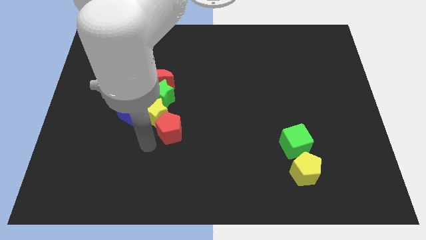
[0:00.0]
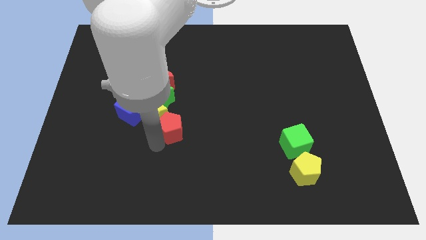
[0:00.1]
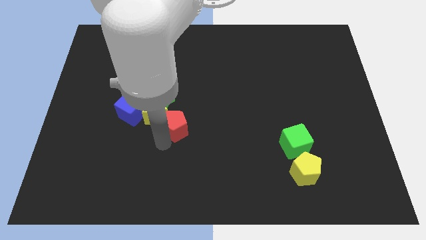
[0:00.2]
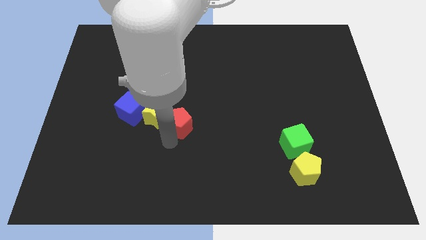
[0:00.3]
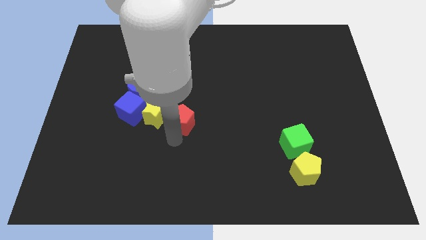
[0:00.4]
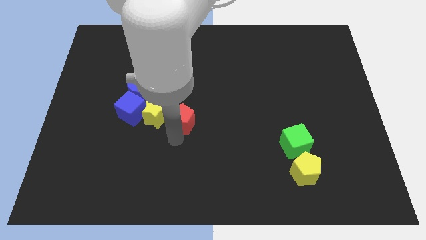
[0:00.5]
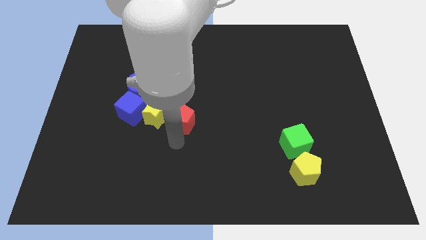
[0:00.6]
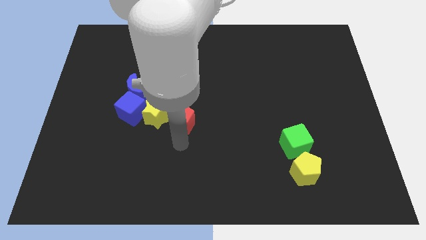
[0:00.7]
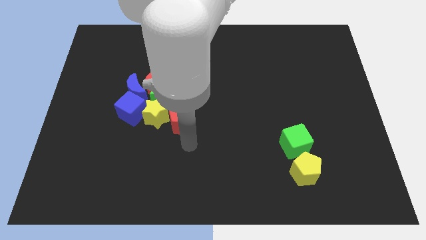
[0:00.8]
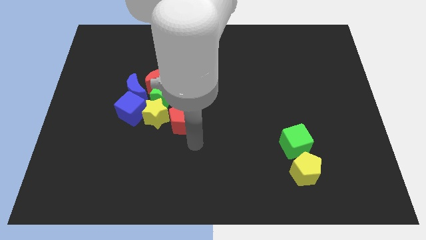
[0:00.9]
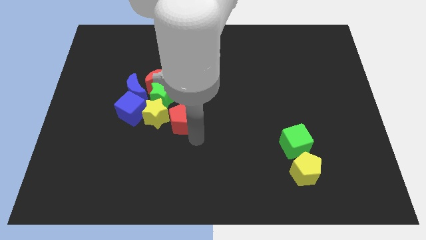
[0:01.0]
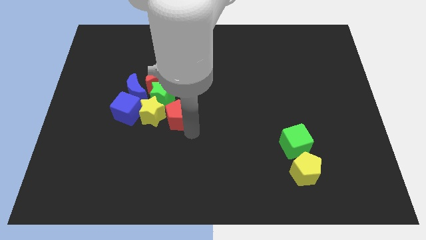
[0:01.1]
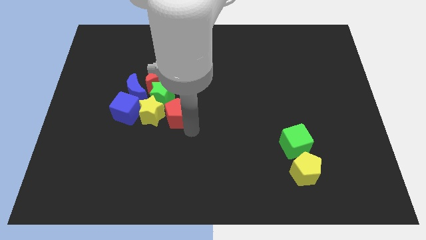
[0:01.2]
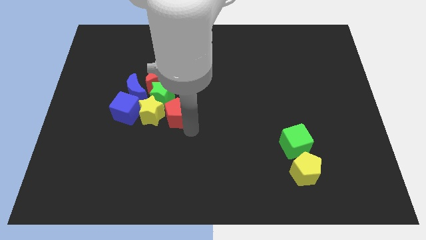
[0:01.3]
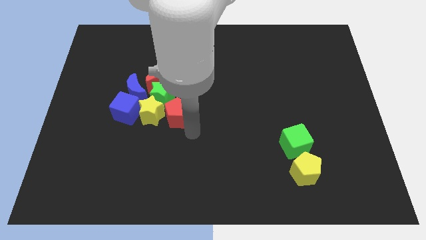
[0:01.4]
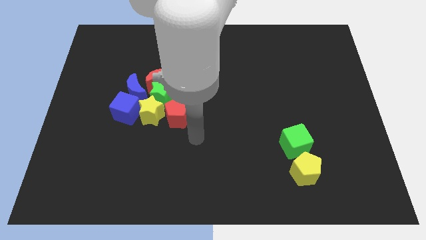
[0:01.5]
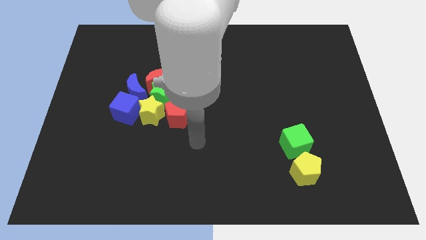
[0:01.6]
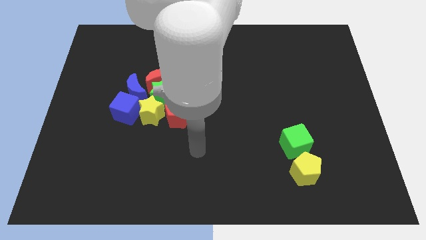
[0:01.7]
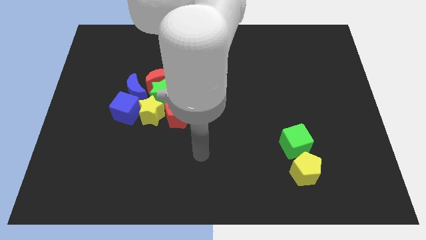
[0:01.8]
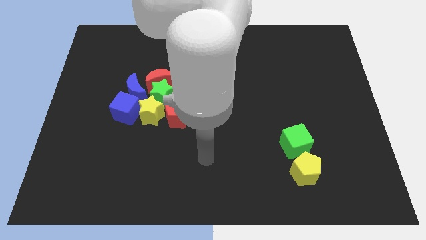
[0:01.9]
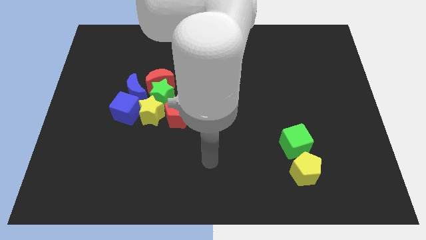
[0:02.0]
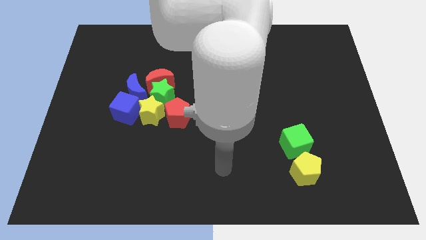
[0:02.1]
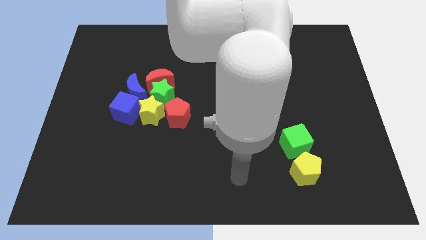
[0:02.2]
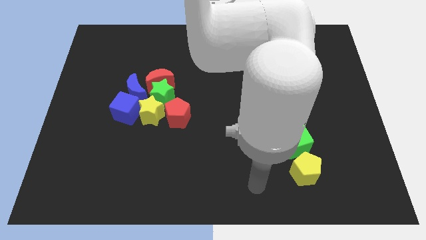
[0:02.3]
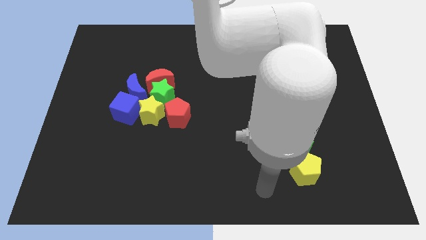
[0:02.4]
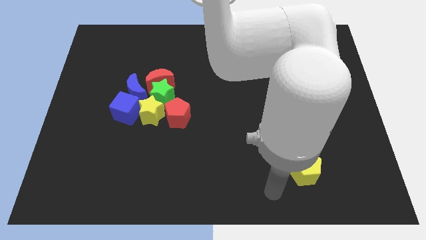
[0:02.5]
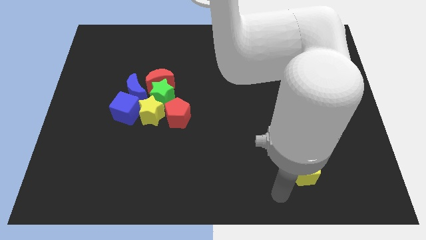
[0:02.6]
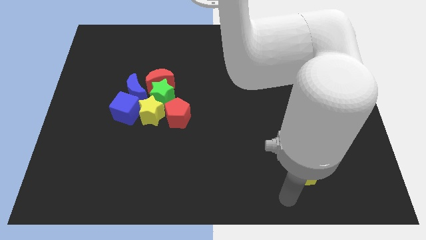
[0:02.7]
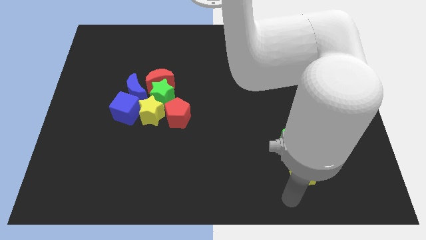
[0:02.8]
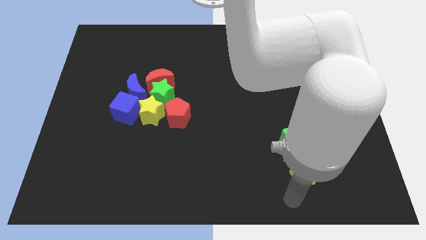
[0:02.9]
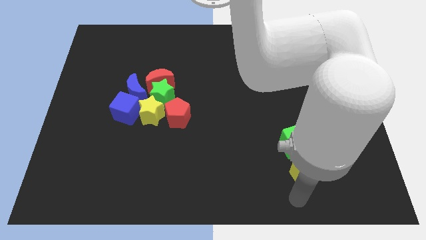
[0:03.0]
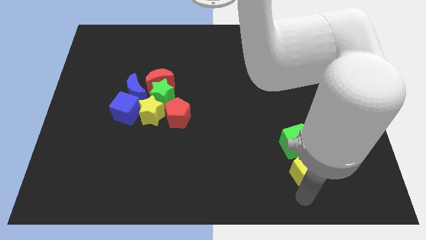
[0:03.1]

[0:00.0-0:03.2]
place the red pentagon to the right side of the yellow star

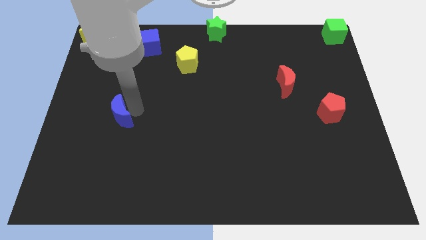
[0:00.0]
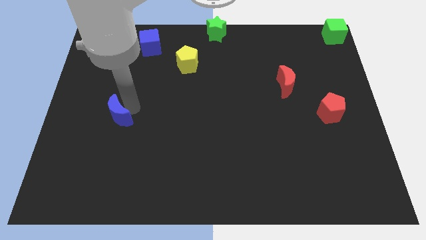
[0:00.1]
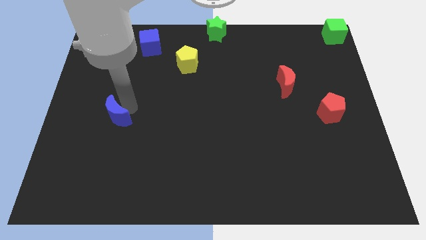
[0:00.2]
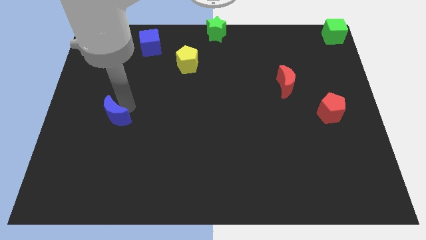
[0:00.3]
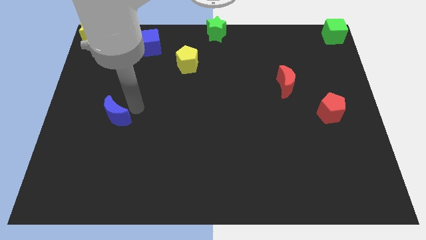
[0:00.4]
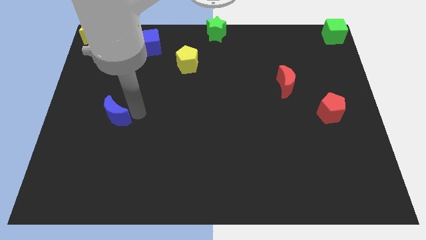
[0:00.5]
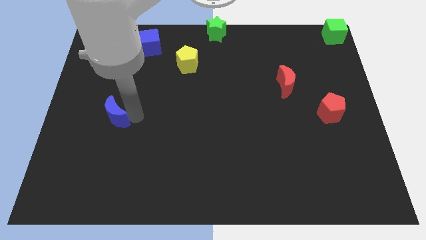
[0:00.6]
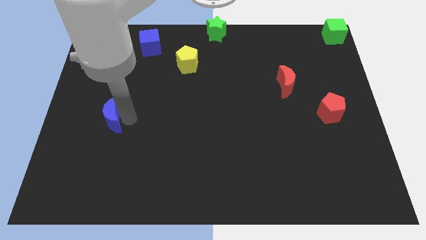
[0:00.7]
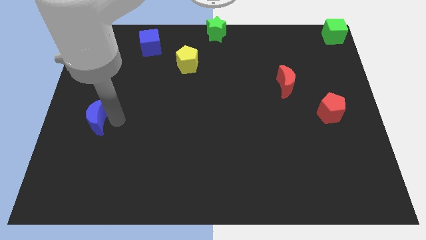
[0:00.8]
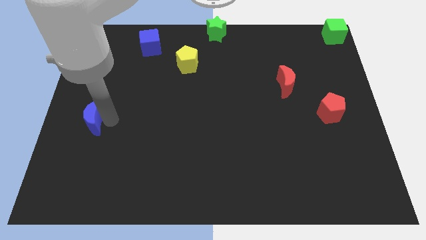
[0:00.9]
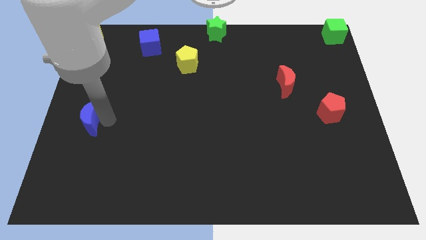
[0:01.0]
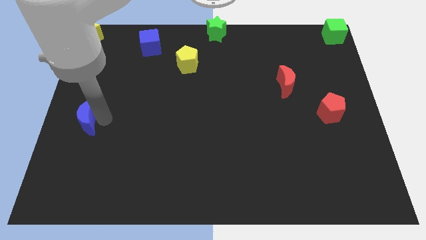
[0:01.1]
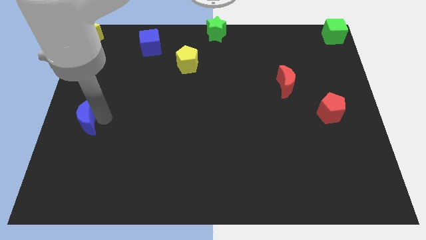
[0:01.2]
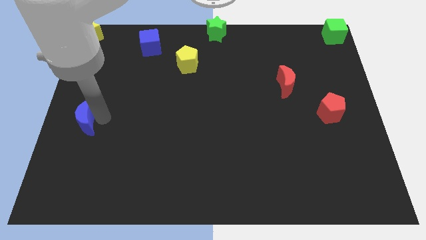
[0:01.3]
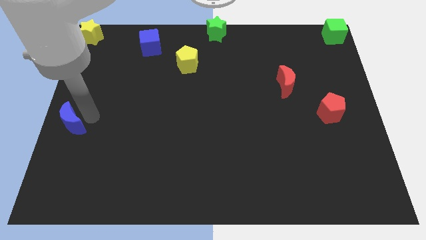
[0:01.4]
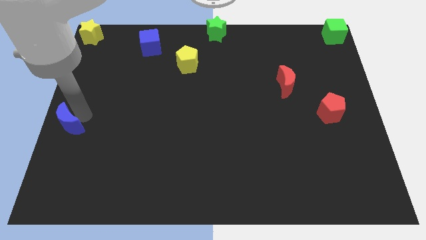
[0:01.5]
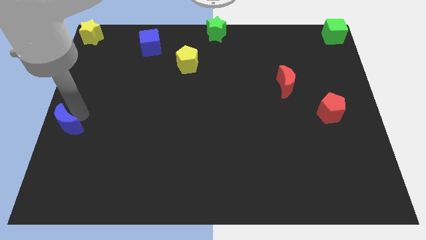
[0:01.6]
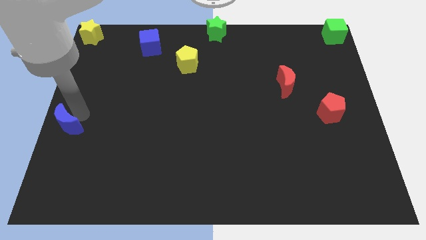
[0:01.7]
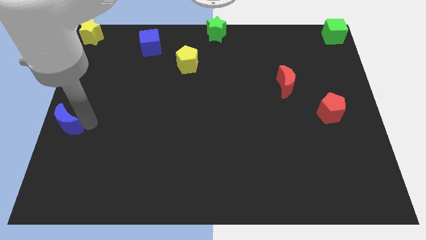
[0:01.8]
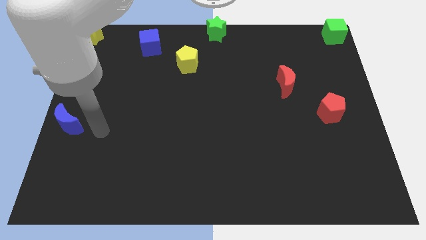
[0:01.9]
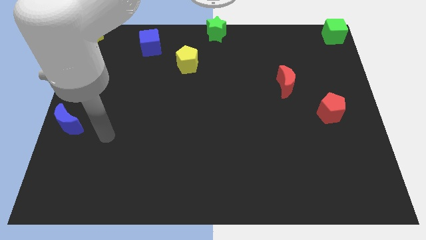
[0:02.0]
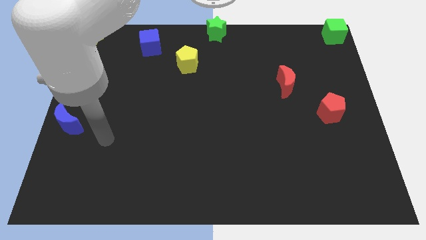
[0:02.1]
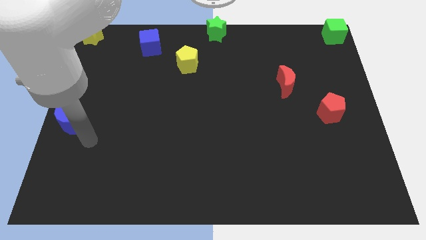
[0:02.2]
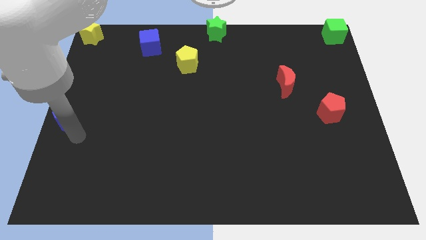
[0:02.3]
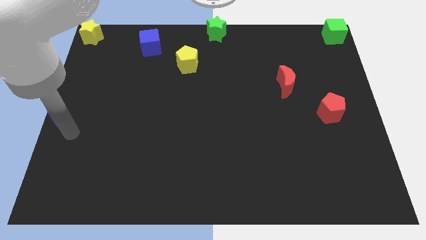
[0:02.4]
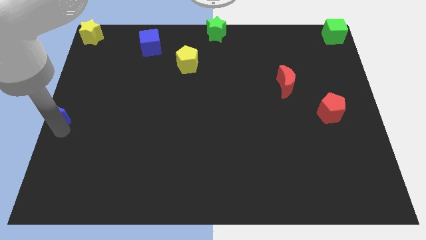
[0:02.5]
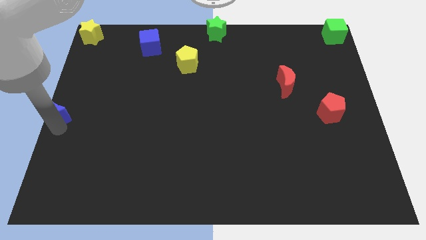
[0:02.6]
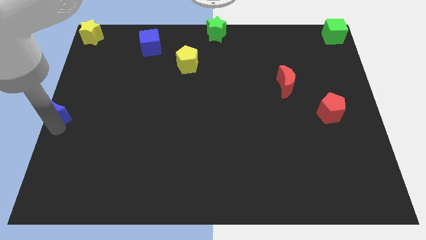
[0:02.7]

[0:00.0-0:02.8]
move the blue crescent to the center left of the board

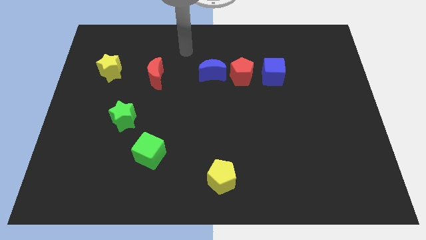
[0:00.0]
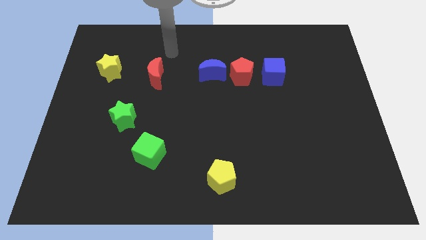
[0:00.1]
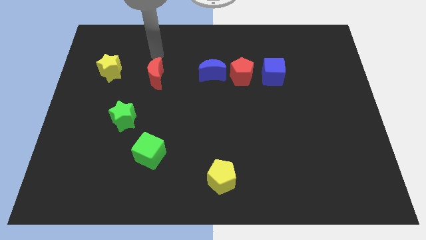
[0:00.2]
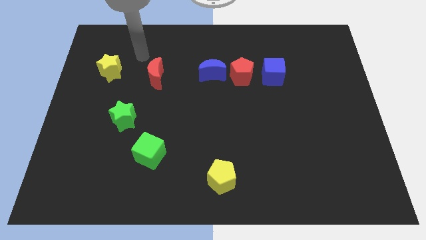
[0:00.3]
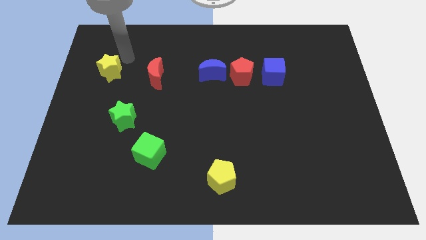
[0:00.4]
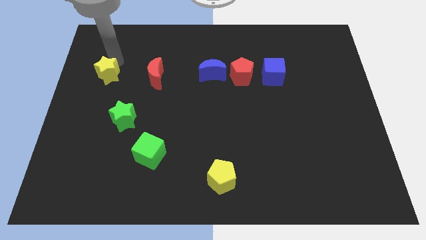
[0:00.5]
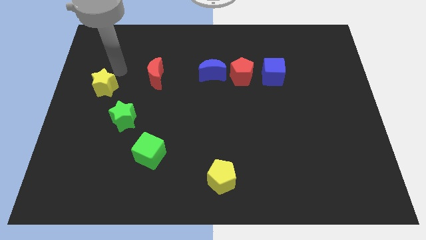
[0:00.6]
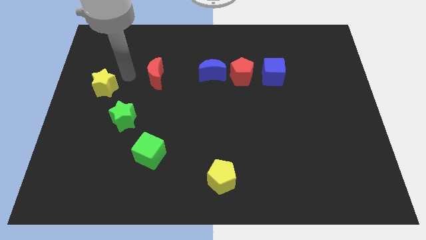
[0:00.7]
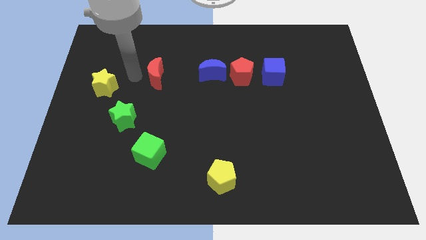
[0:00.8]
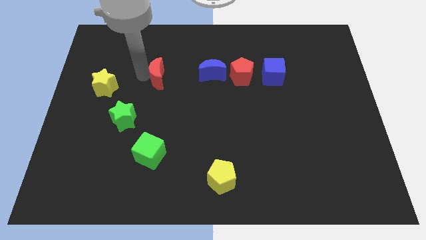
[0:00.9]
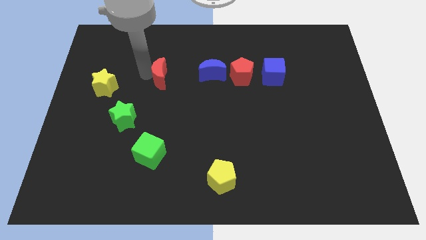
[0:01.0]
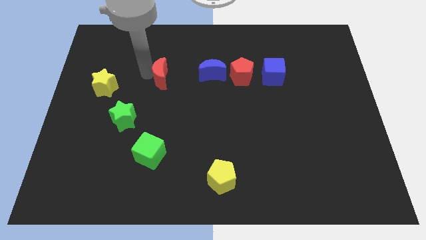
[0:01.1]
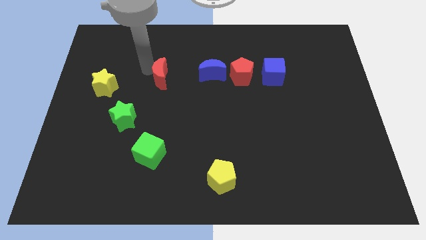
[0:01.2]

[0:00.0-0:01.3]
push the yellow star slightly downwards

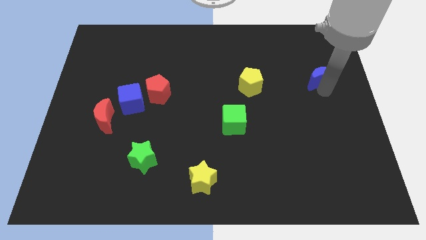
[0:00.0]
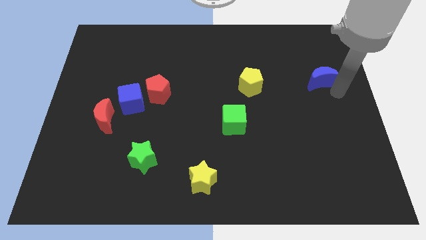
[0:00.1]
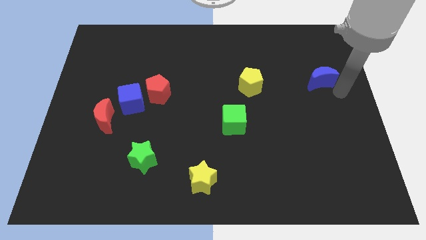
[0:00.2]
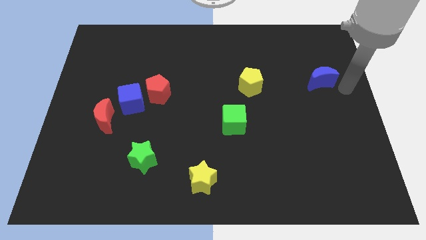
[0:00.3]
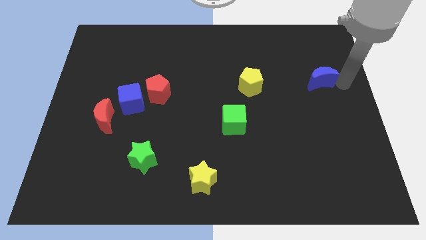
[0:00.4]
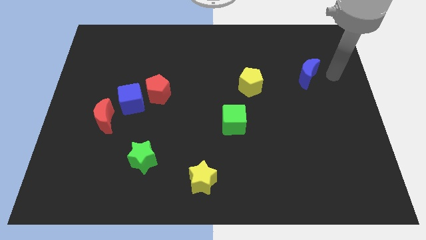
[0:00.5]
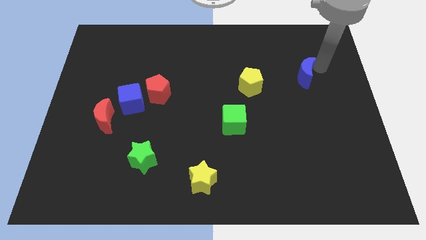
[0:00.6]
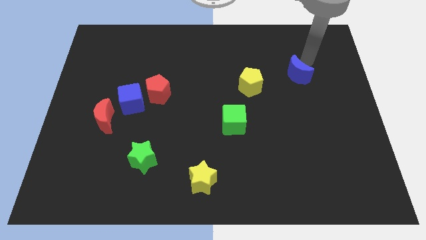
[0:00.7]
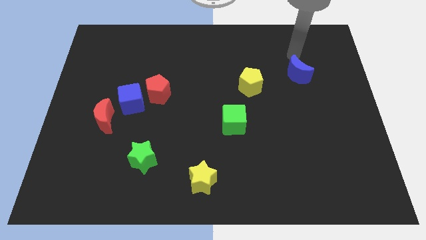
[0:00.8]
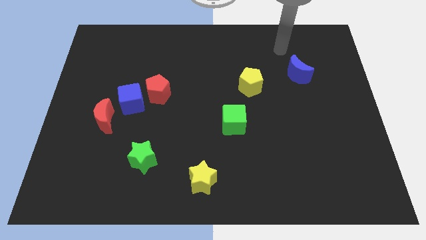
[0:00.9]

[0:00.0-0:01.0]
push the blue crescent slightly towards the top

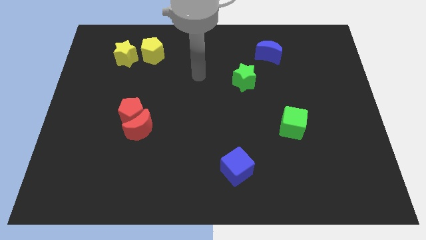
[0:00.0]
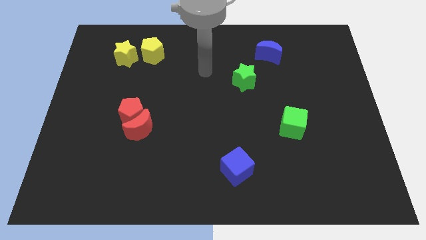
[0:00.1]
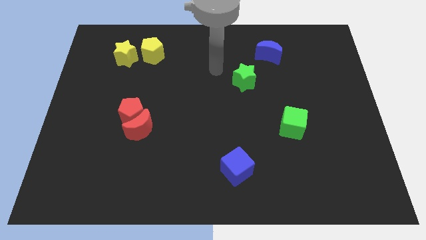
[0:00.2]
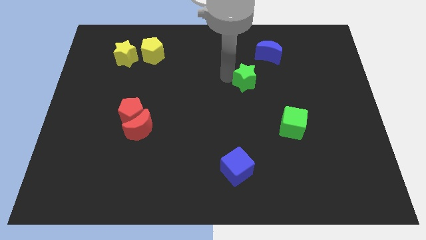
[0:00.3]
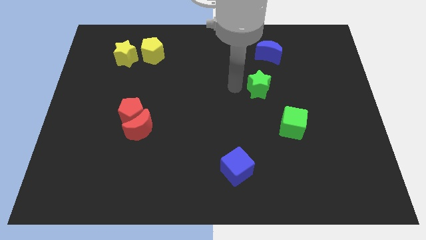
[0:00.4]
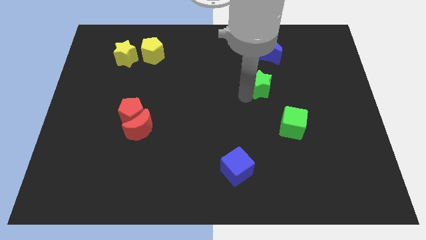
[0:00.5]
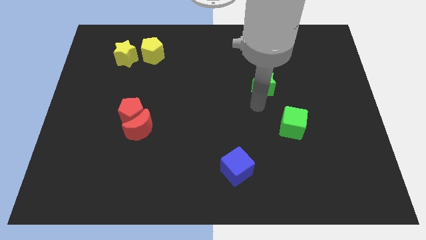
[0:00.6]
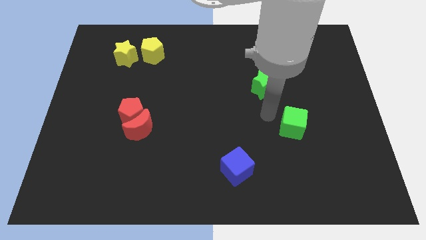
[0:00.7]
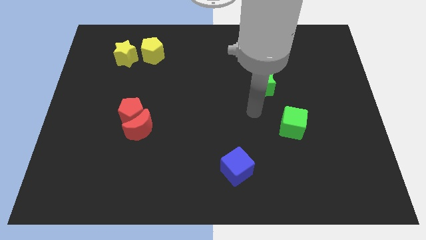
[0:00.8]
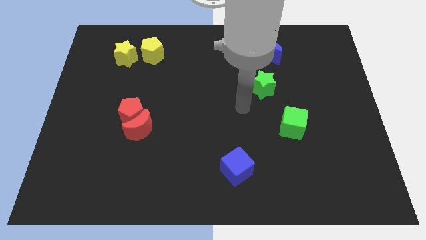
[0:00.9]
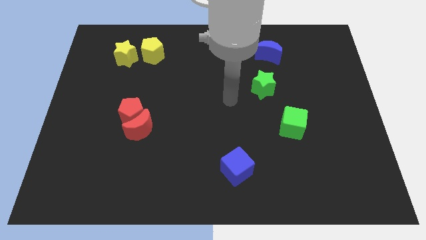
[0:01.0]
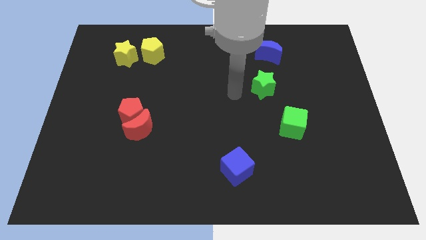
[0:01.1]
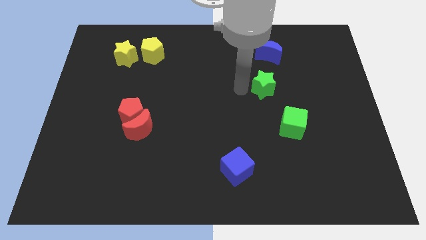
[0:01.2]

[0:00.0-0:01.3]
move the green star towards the green cube
